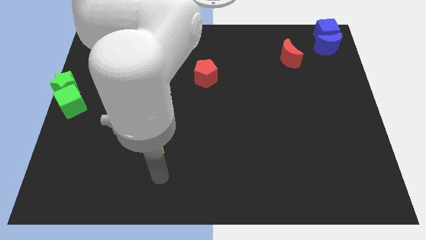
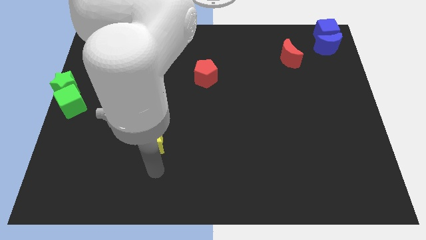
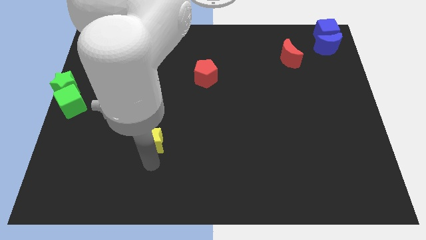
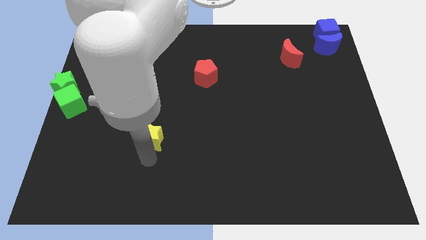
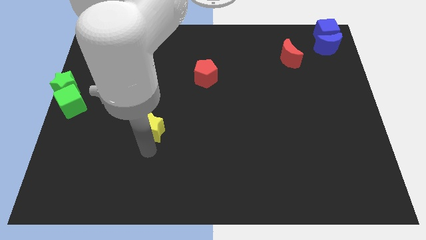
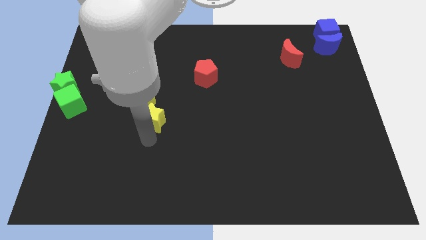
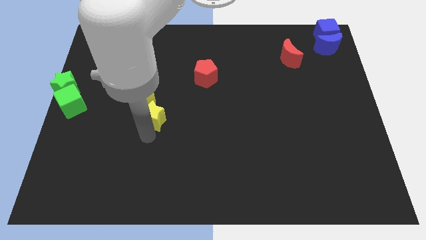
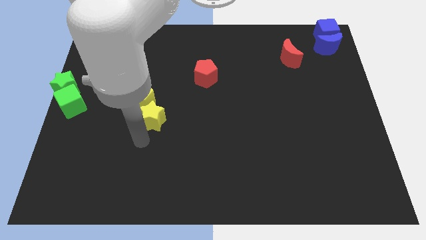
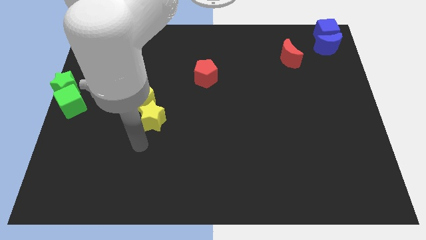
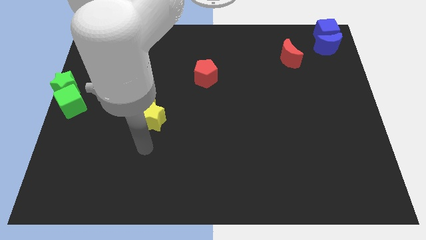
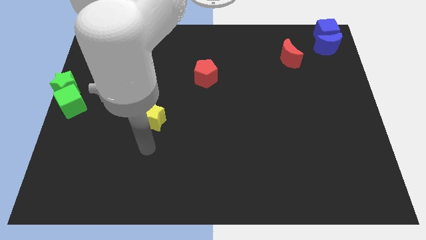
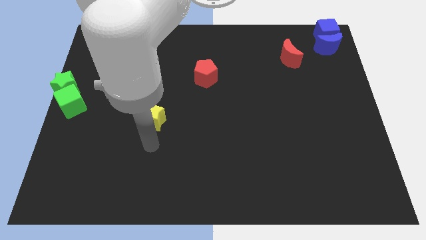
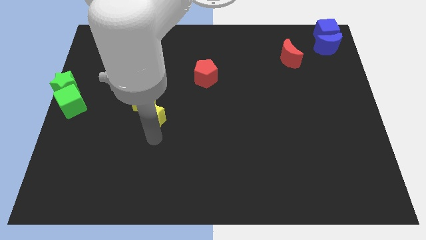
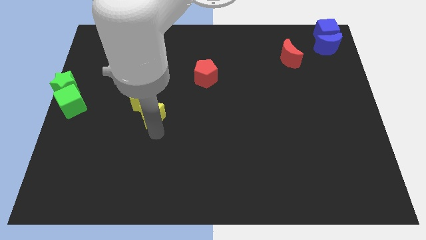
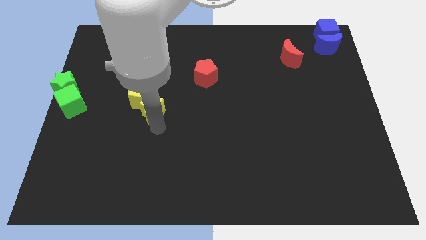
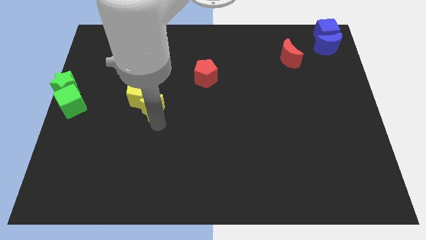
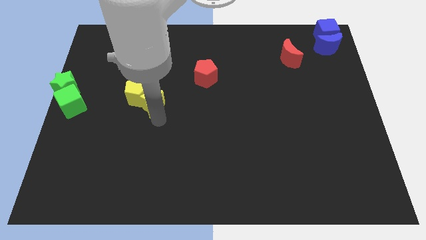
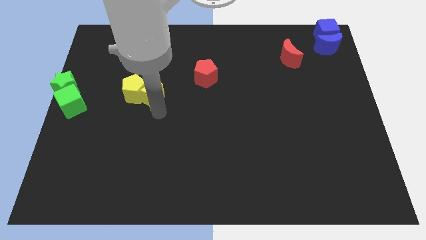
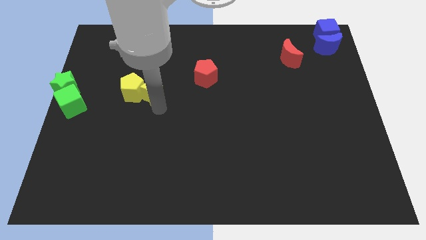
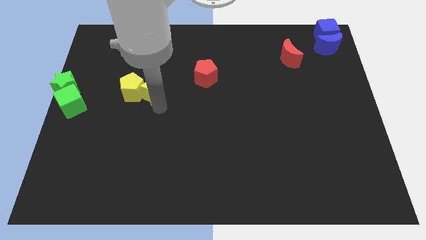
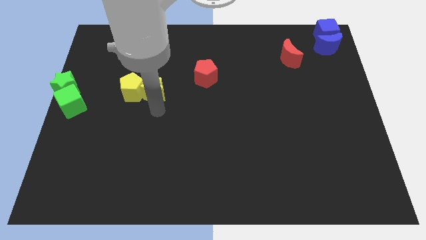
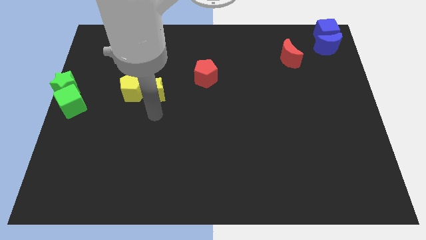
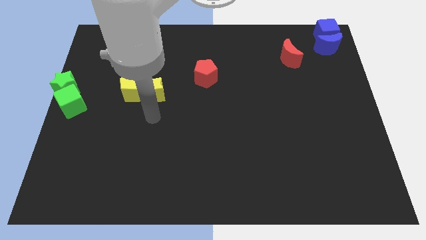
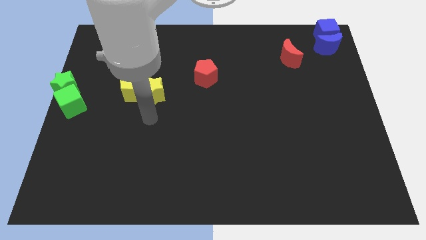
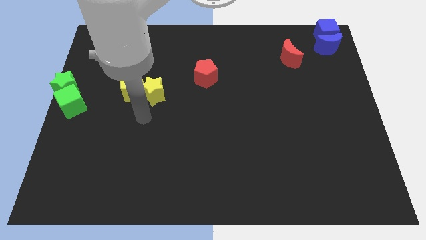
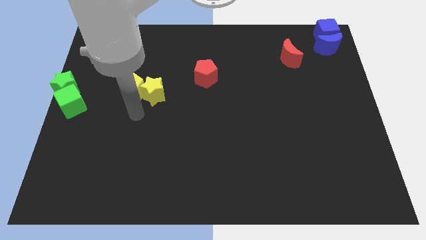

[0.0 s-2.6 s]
push the yellow star into the yellow pentagon

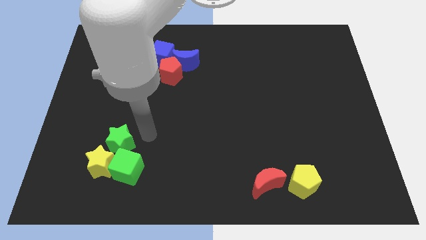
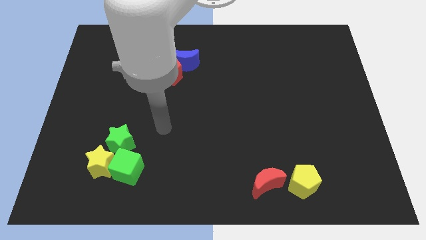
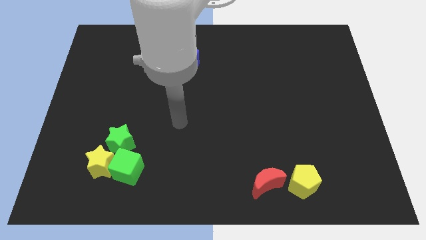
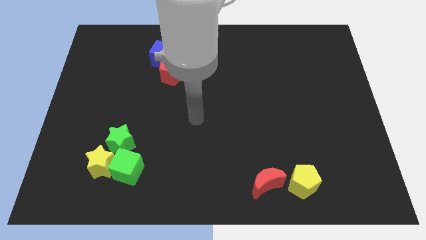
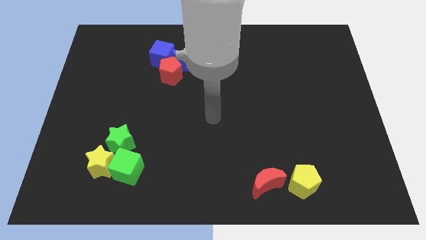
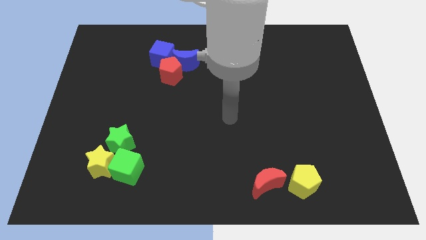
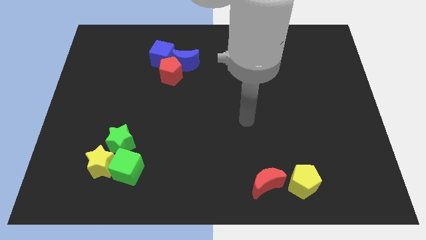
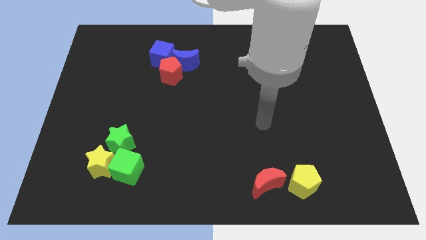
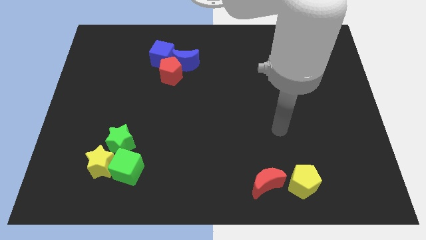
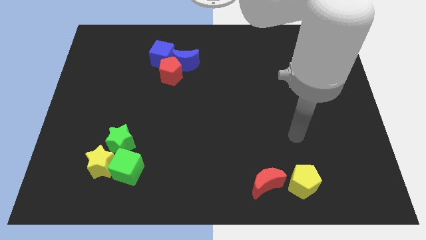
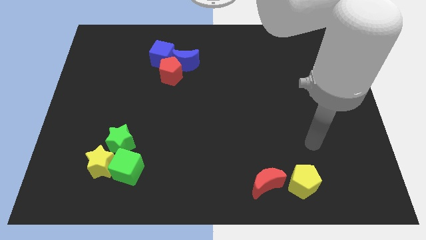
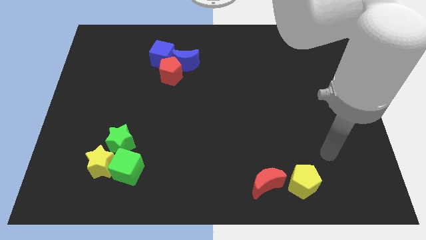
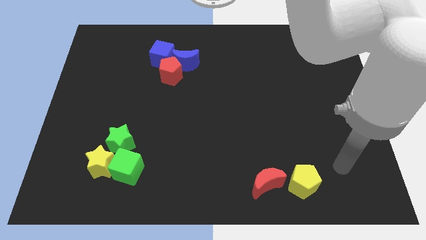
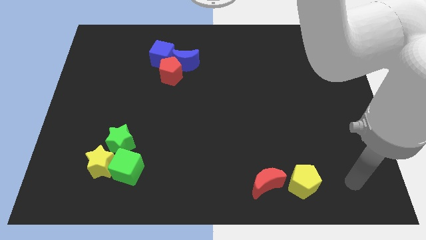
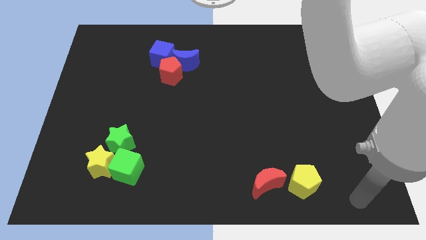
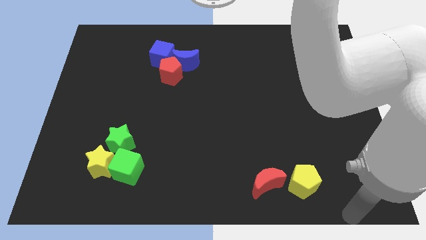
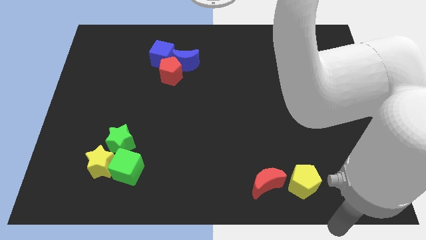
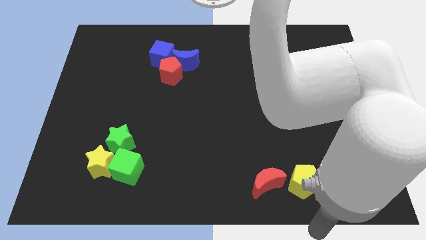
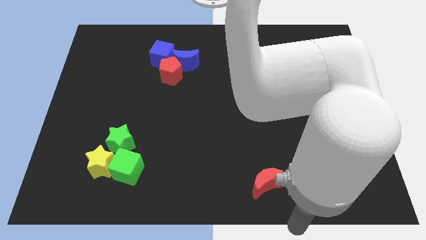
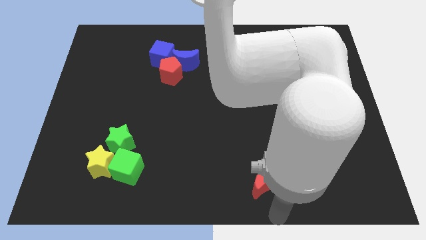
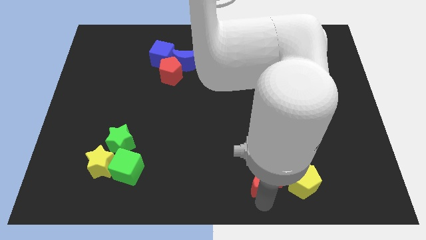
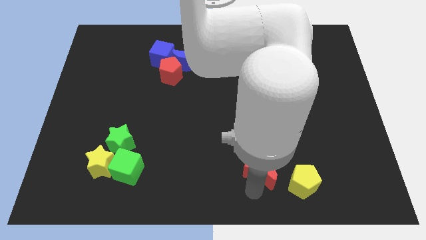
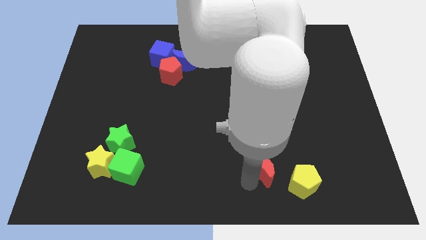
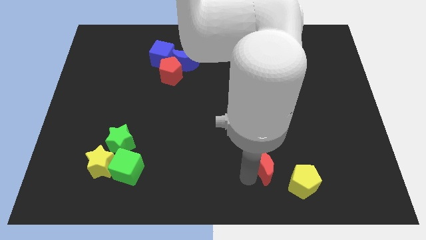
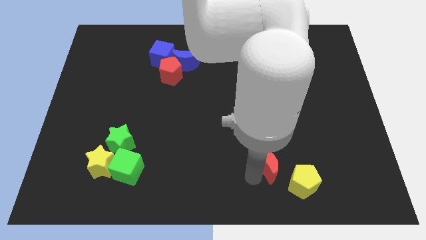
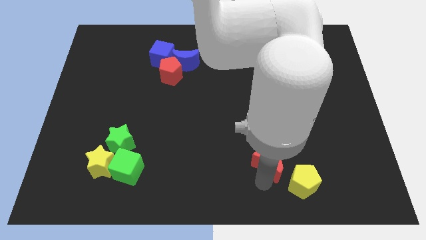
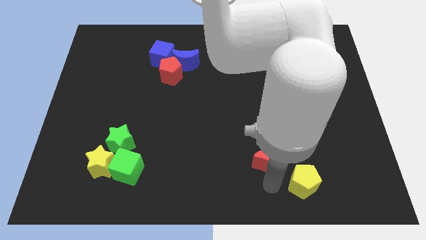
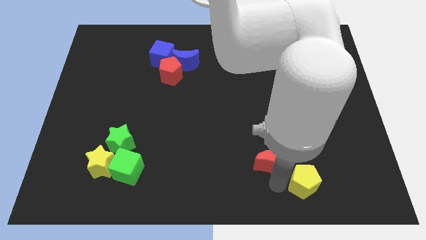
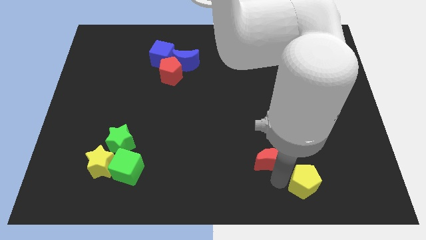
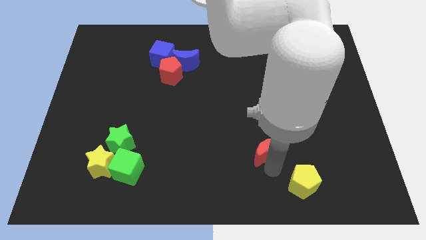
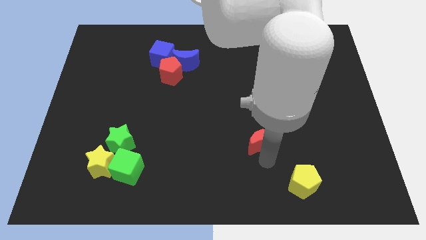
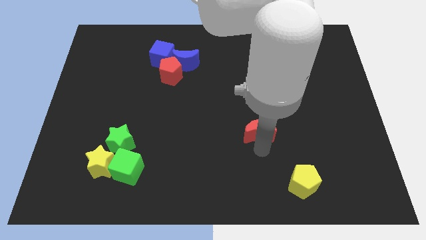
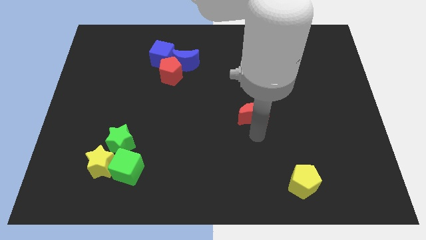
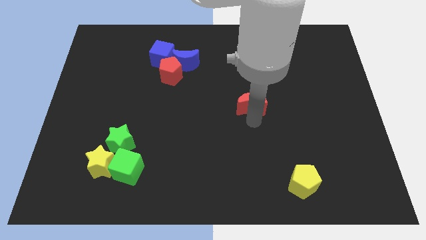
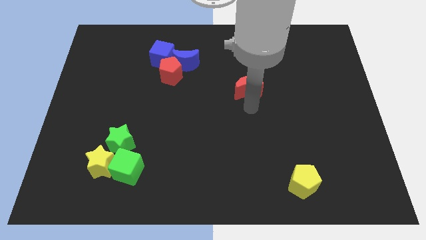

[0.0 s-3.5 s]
move the red moon away from the yellow pentagon

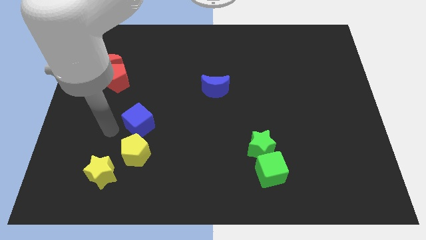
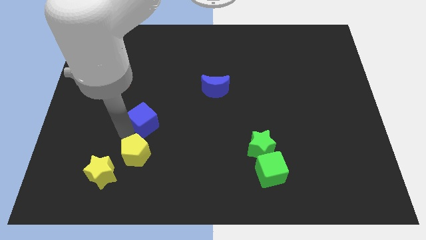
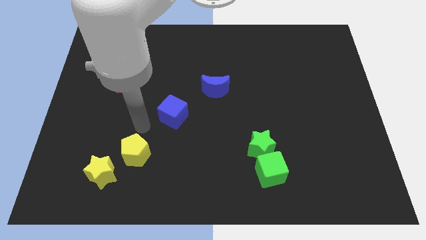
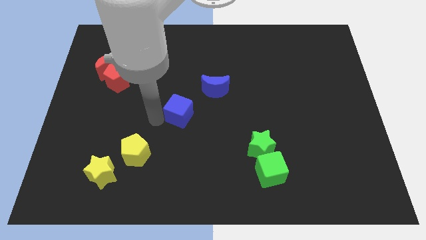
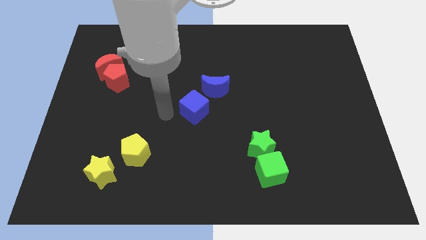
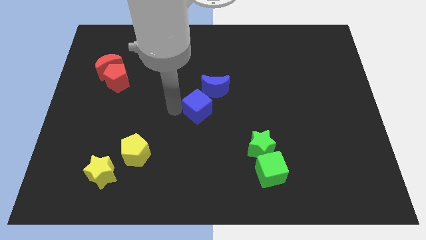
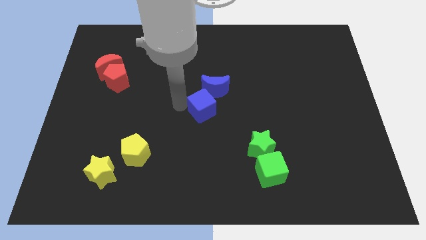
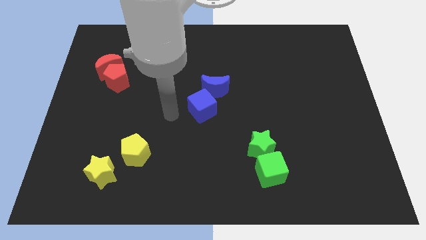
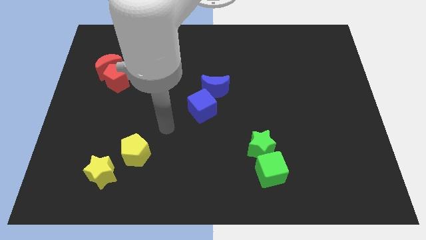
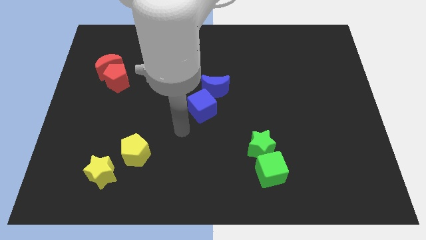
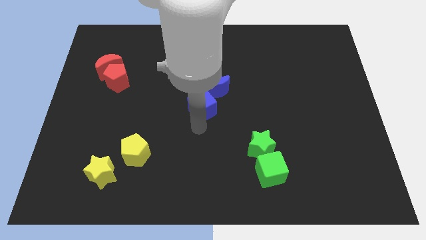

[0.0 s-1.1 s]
place the blue cube close to the red crescent

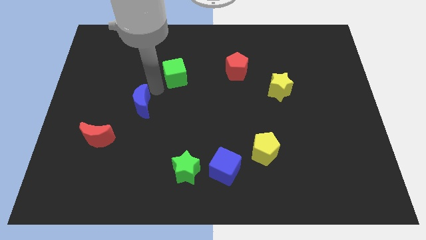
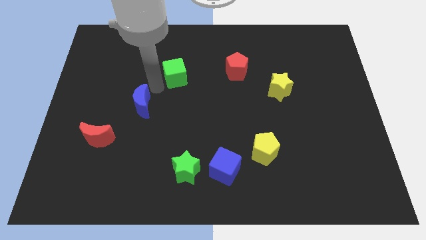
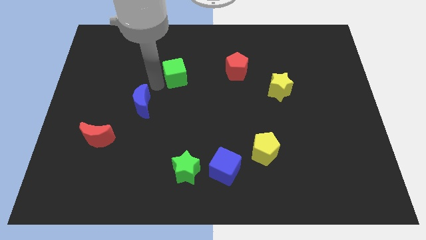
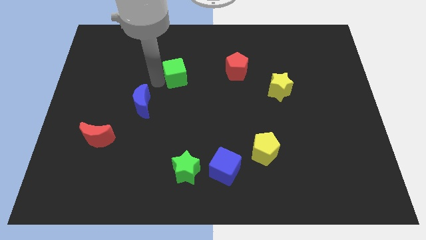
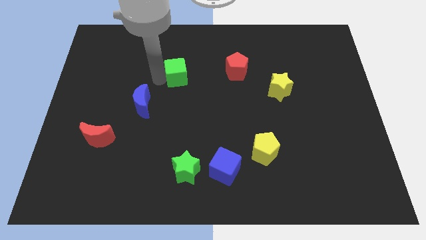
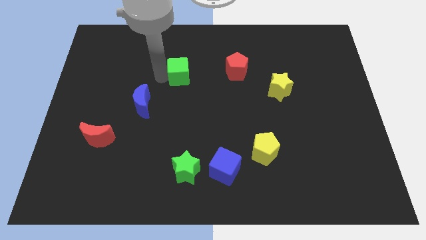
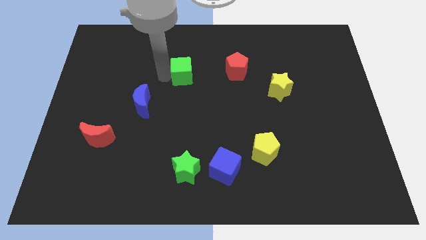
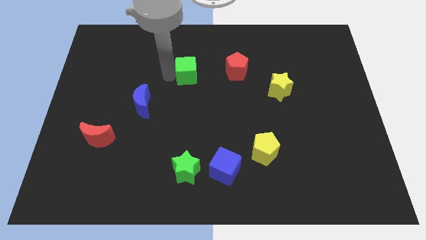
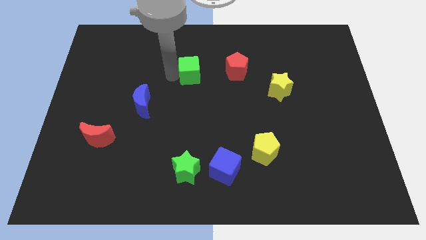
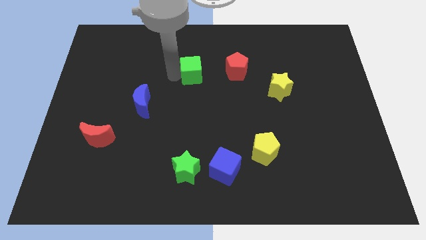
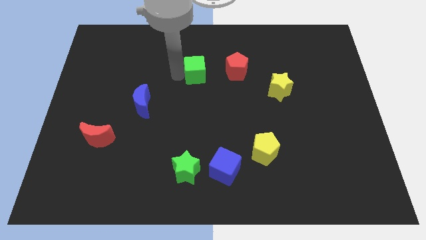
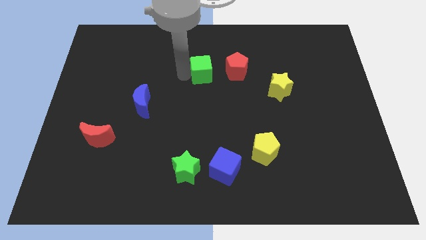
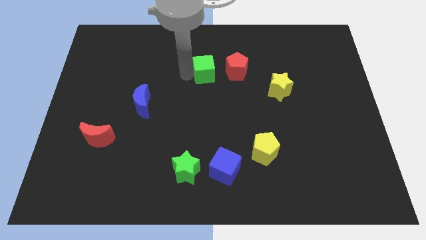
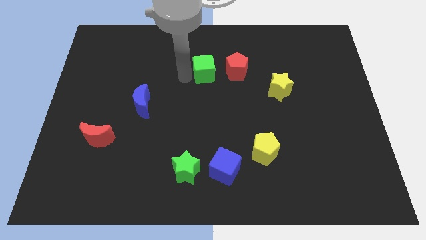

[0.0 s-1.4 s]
move green cube parallel left to red pentagon

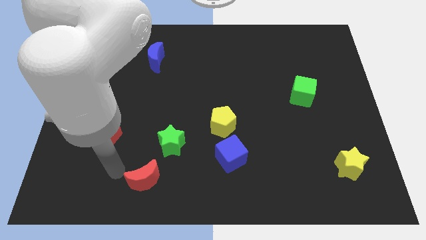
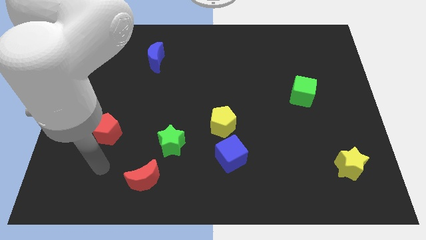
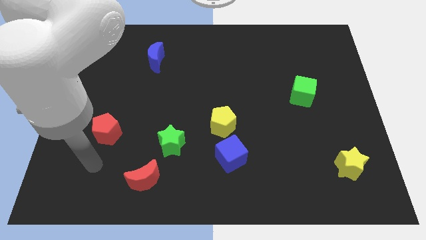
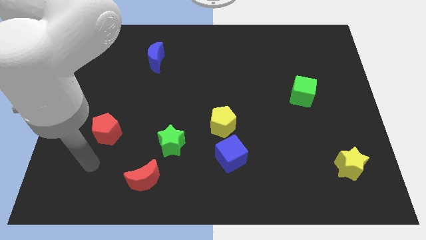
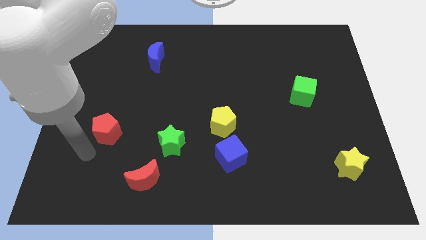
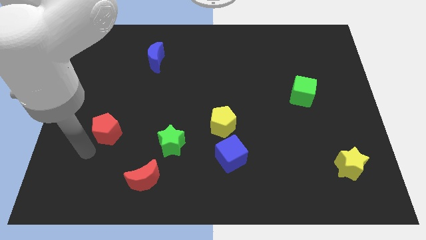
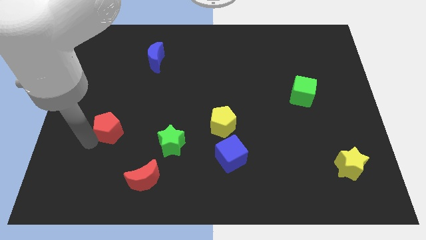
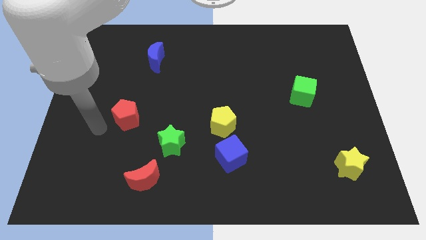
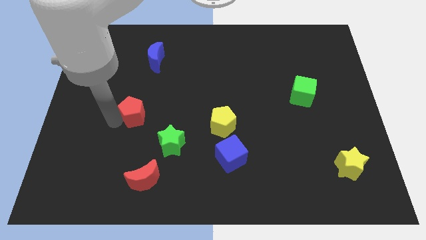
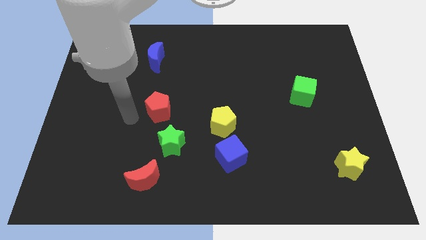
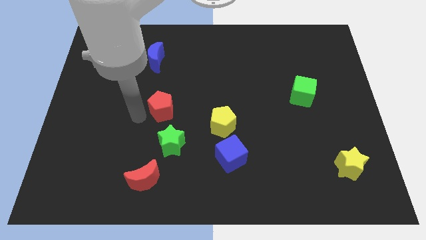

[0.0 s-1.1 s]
push red pentagon diagonally in between blue moon and green star
